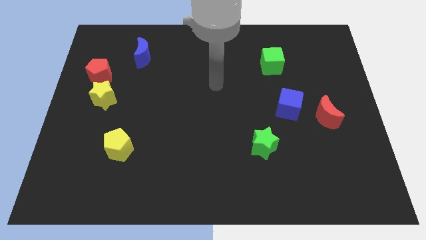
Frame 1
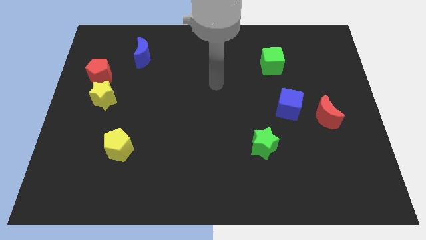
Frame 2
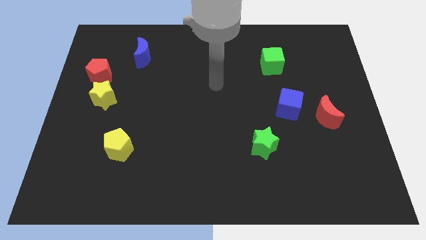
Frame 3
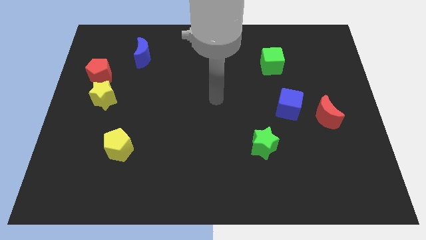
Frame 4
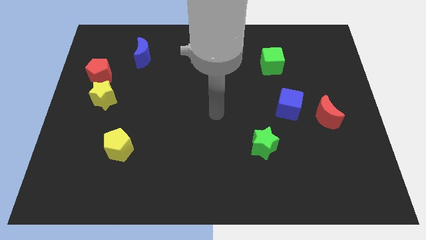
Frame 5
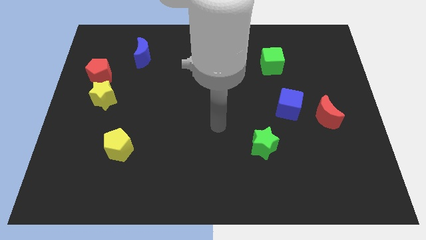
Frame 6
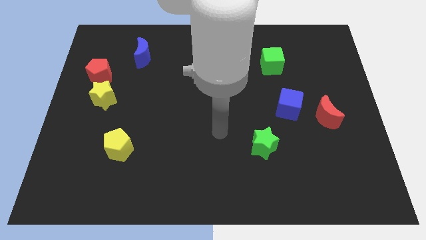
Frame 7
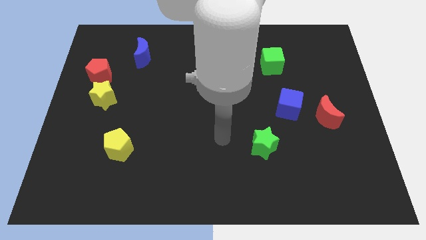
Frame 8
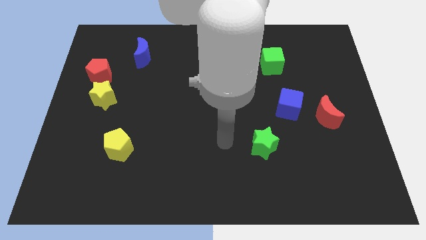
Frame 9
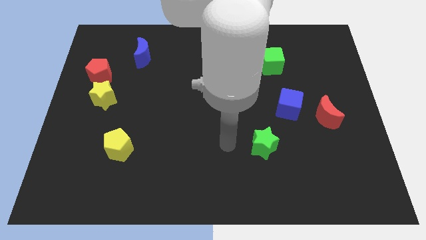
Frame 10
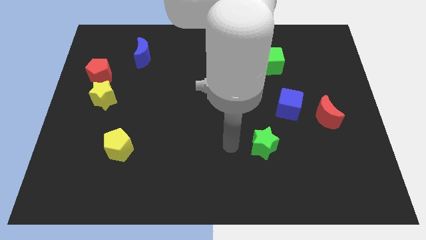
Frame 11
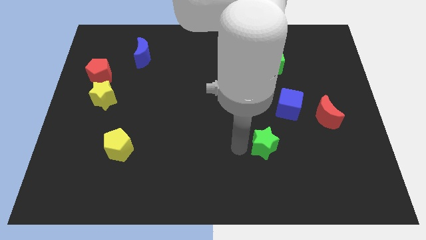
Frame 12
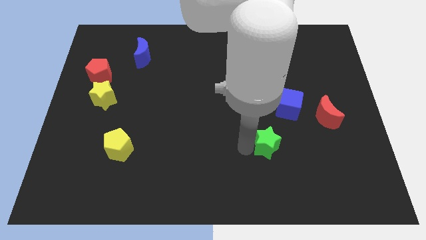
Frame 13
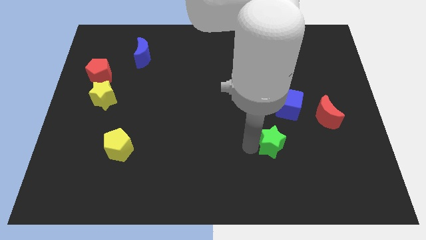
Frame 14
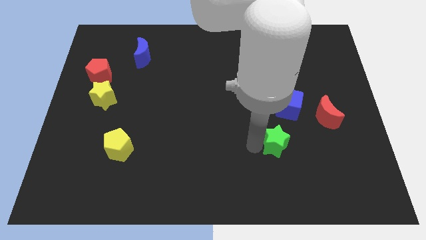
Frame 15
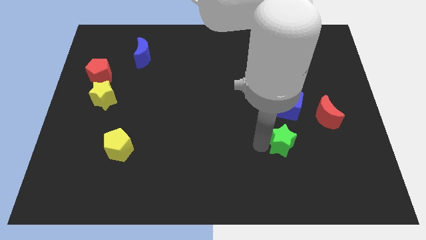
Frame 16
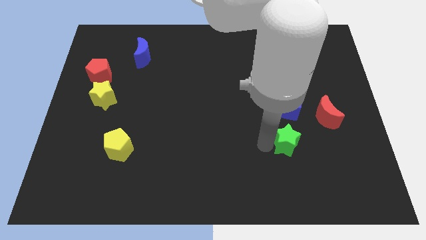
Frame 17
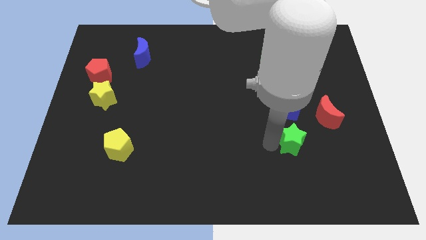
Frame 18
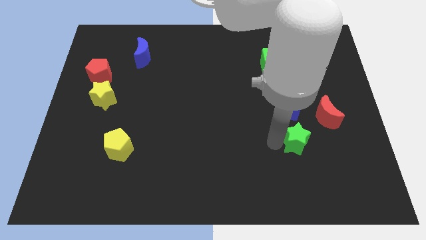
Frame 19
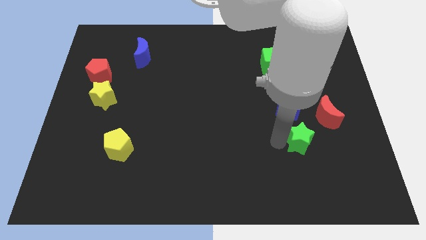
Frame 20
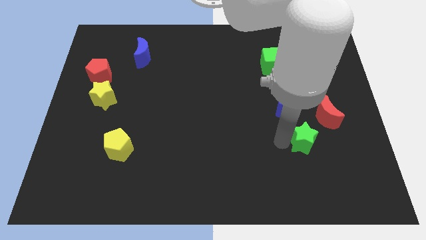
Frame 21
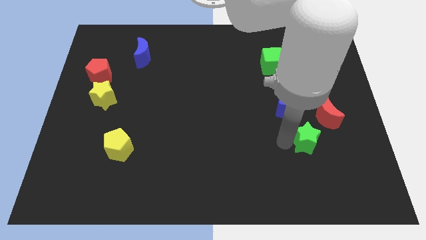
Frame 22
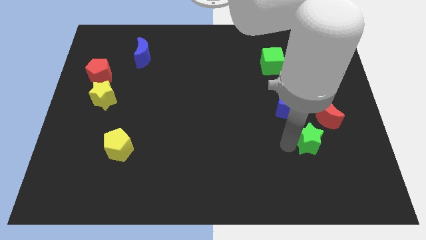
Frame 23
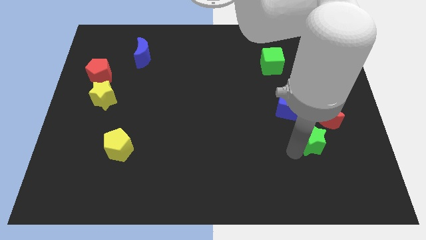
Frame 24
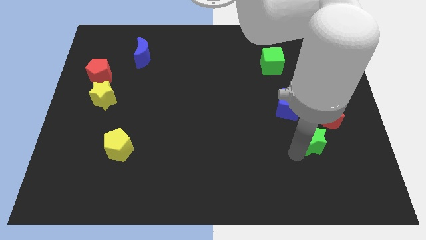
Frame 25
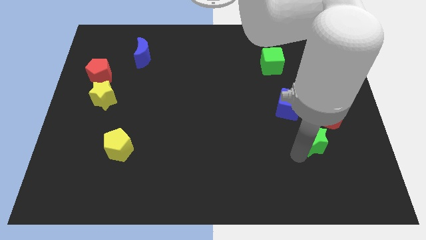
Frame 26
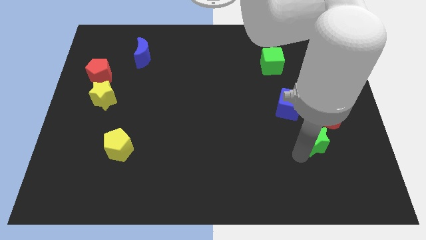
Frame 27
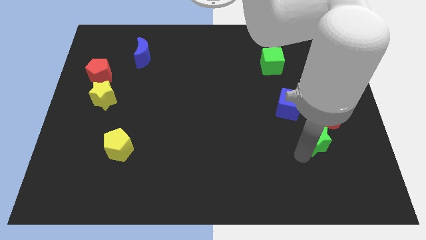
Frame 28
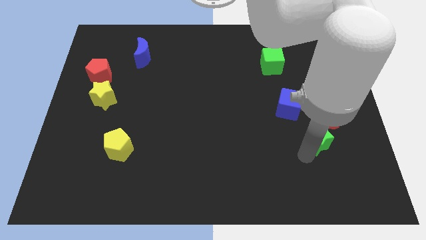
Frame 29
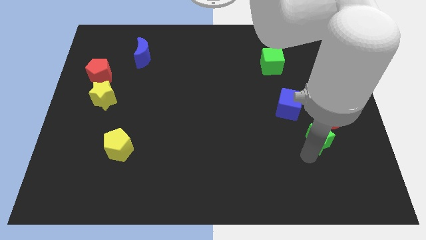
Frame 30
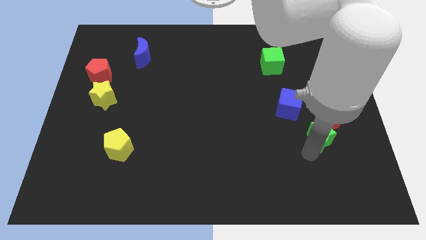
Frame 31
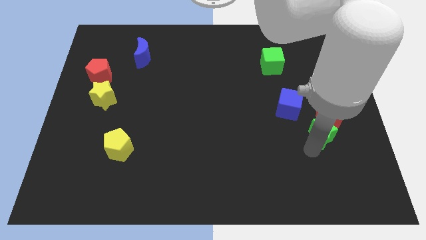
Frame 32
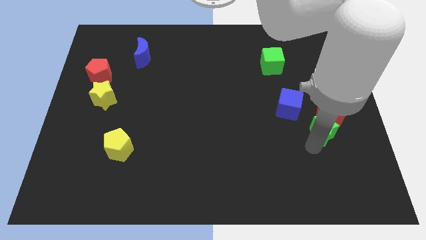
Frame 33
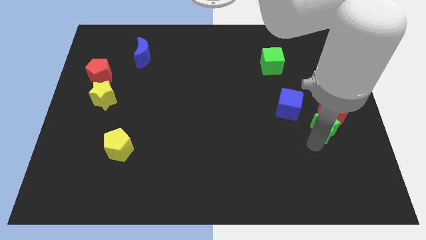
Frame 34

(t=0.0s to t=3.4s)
slide the green star next to the red moon

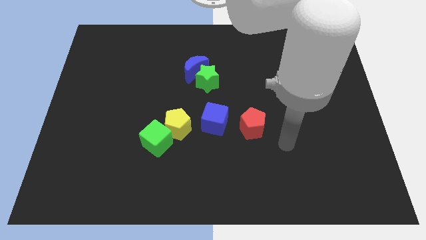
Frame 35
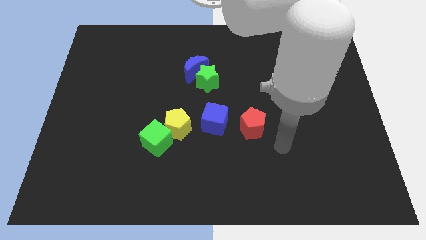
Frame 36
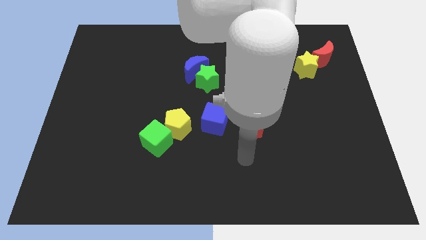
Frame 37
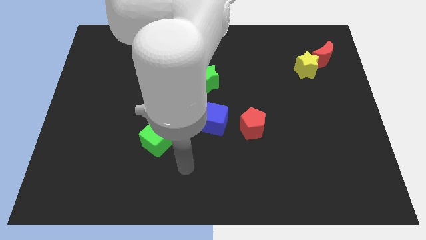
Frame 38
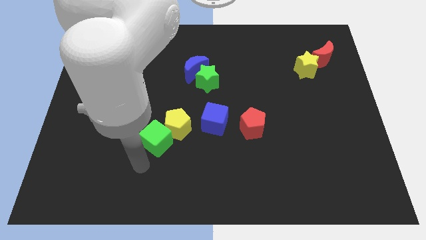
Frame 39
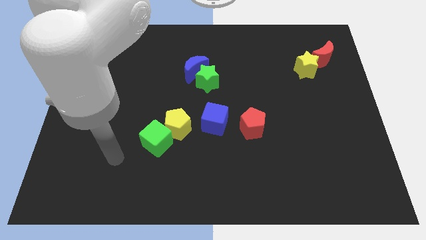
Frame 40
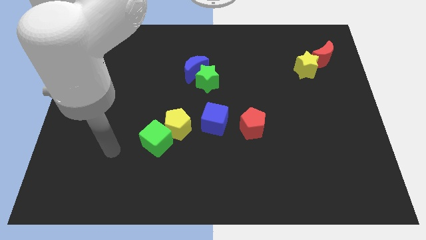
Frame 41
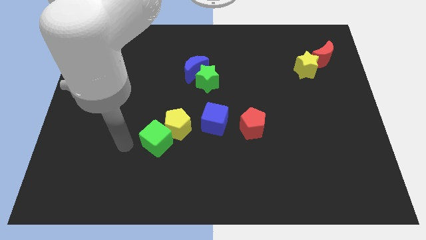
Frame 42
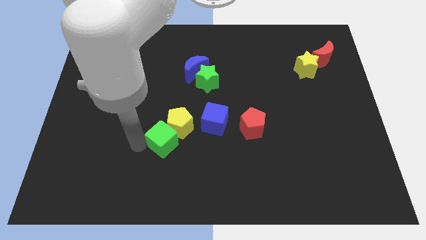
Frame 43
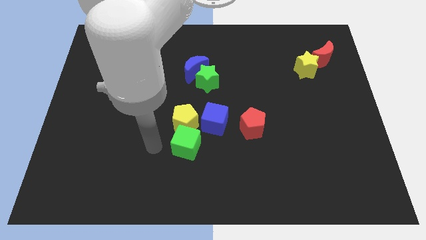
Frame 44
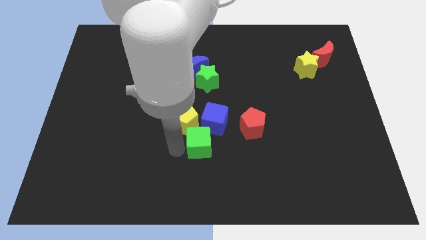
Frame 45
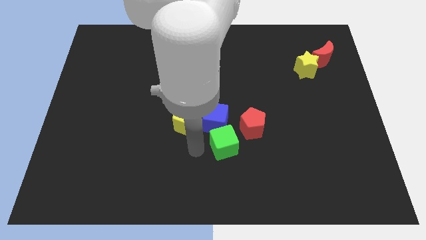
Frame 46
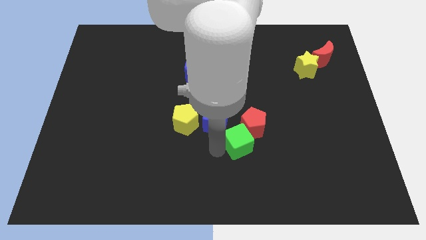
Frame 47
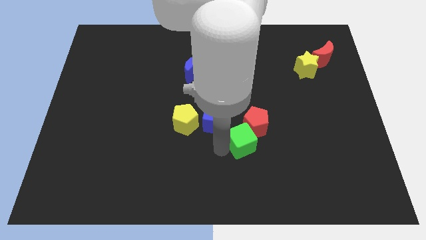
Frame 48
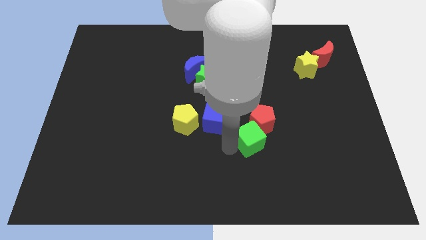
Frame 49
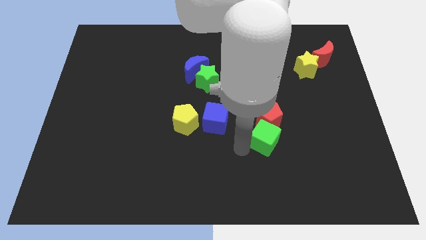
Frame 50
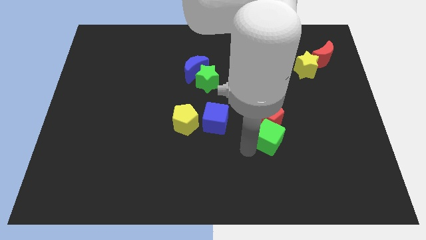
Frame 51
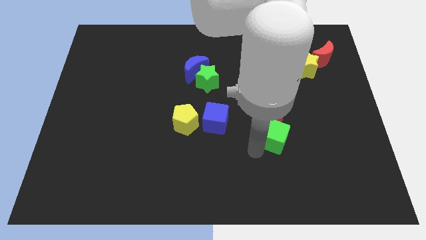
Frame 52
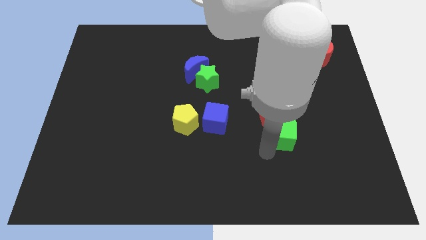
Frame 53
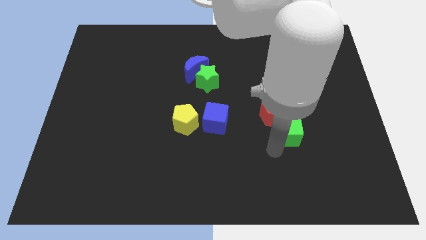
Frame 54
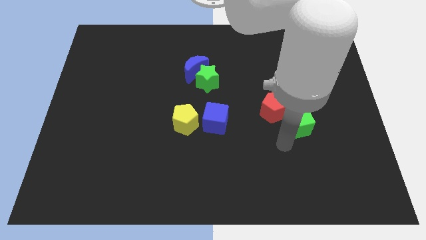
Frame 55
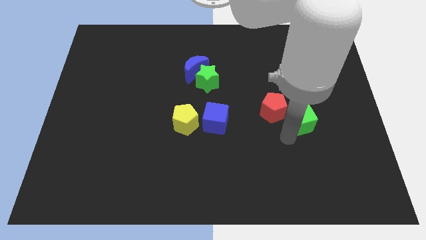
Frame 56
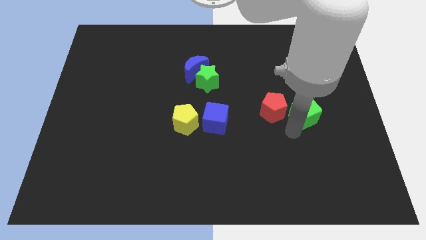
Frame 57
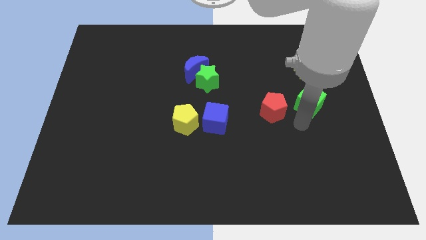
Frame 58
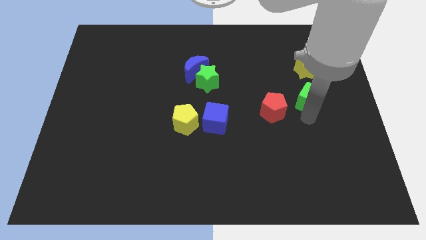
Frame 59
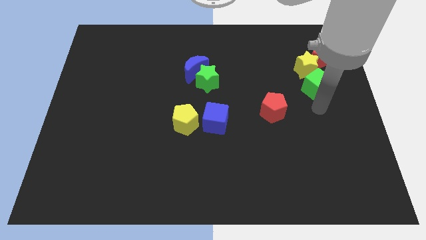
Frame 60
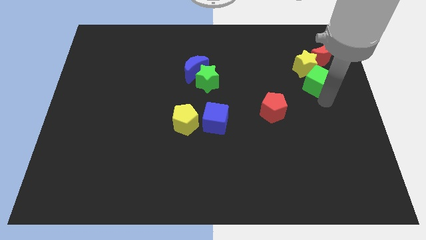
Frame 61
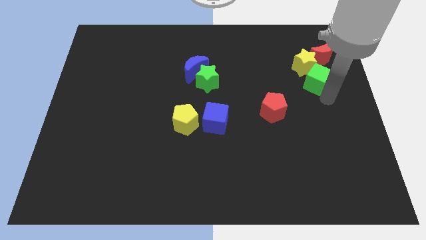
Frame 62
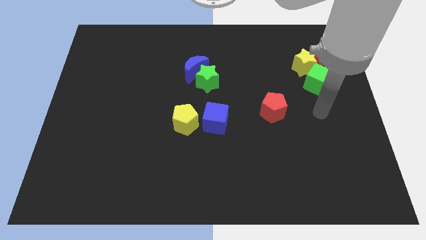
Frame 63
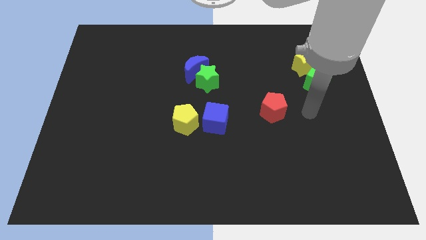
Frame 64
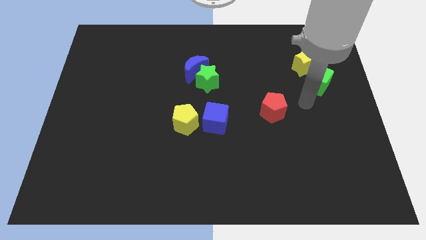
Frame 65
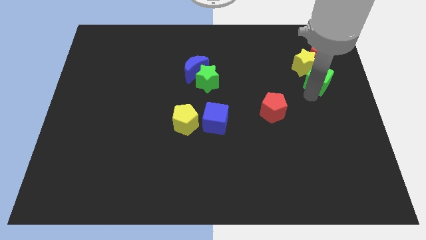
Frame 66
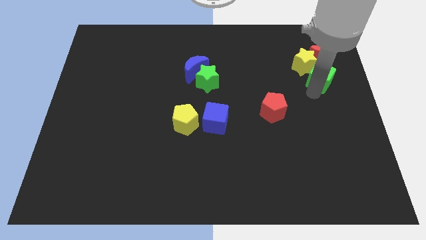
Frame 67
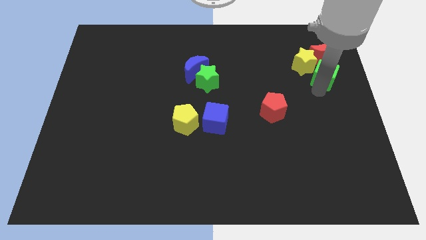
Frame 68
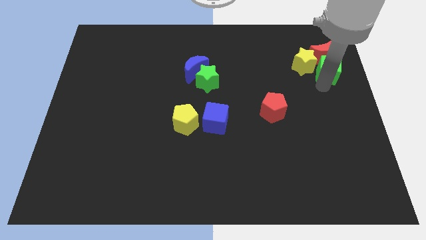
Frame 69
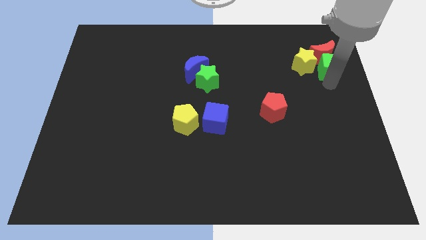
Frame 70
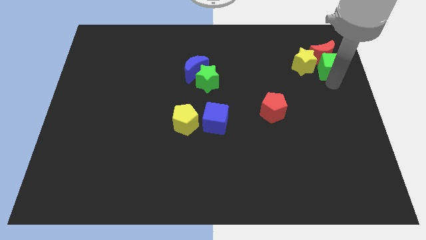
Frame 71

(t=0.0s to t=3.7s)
move the green cube close to the red moon

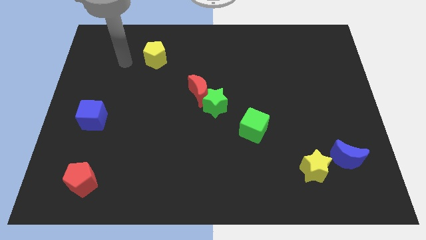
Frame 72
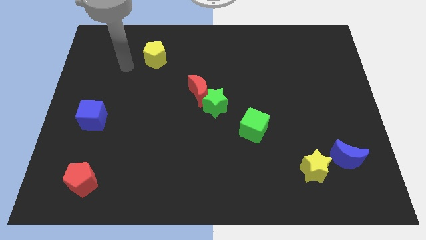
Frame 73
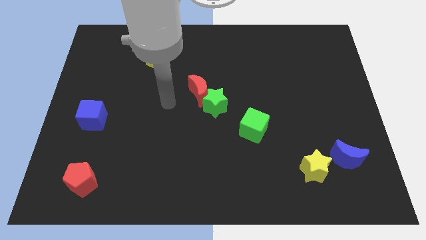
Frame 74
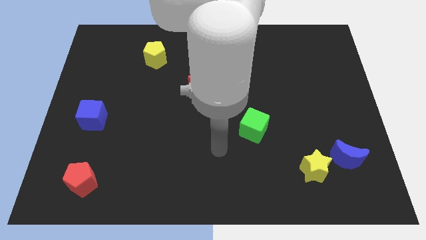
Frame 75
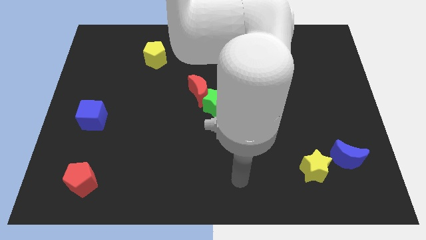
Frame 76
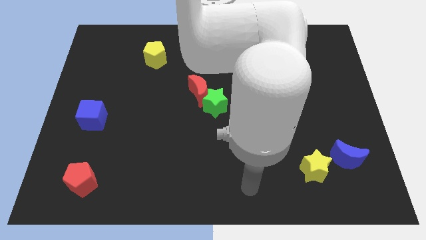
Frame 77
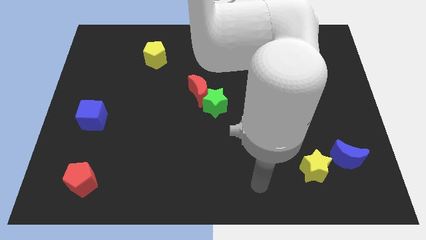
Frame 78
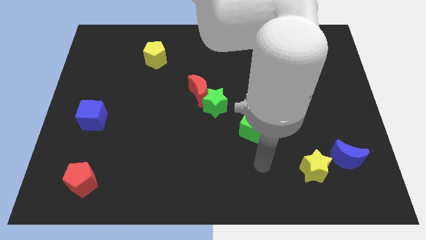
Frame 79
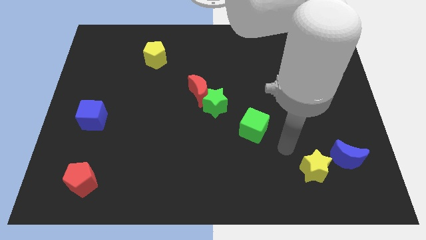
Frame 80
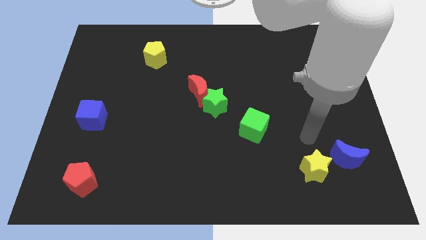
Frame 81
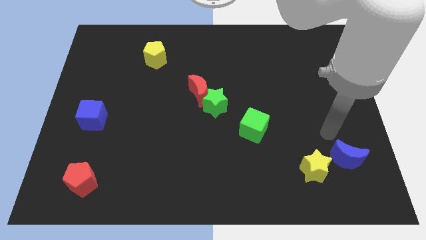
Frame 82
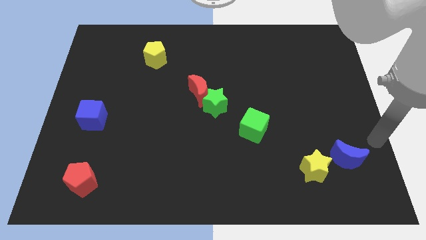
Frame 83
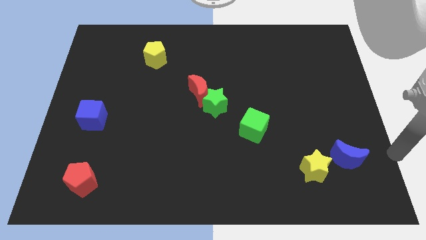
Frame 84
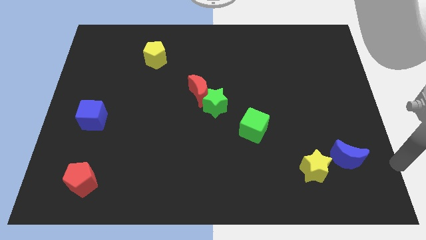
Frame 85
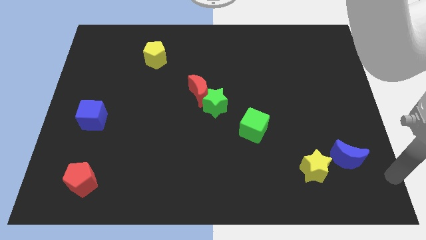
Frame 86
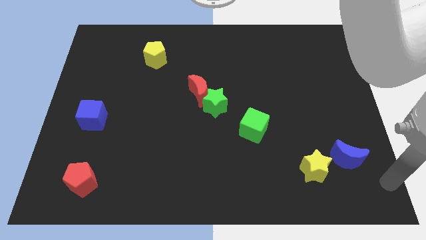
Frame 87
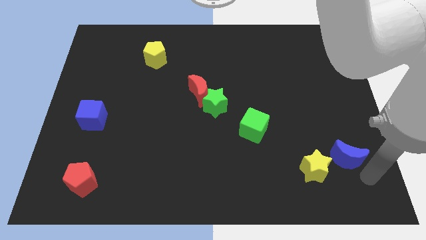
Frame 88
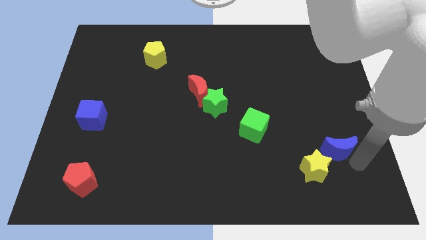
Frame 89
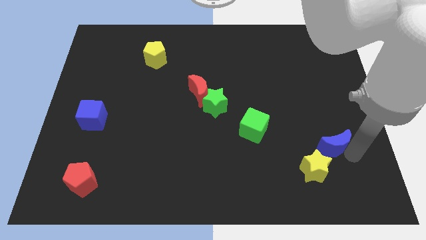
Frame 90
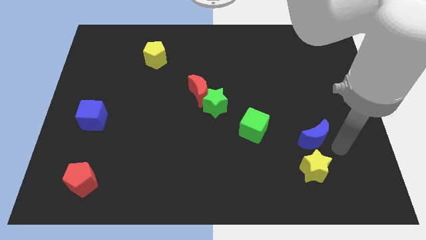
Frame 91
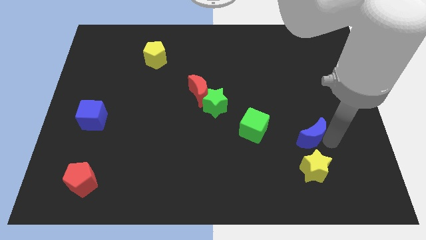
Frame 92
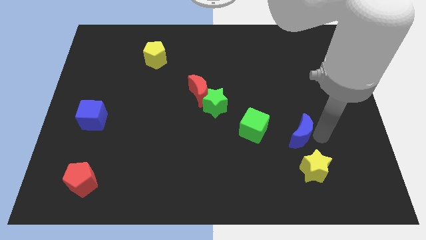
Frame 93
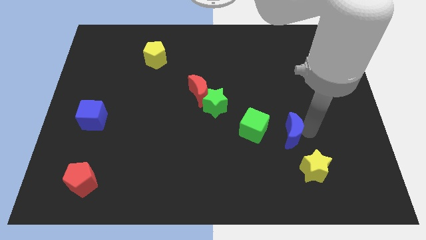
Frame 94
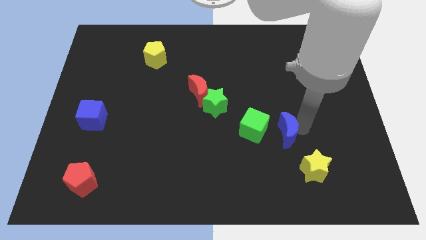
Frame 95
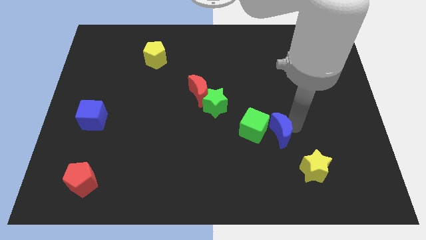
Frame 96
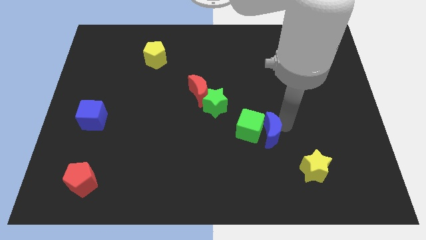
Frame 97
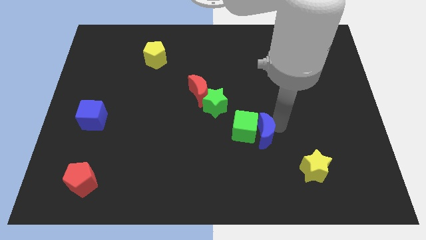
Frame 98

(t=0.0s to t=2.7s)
slide the blue moon next to the green cube
